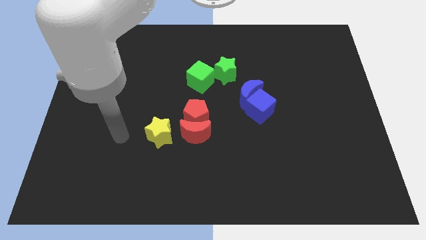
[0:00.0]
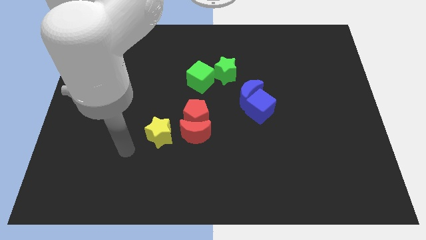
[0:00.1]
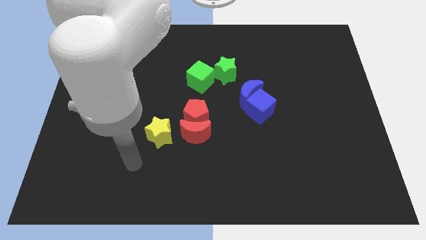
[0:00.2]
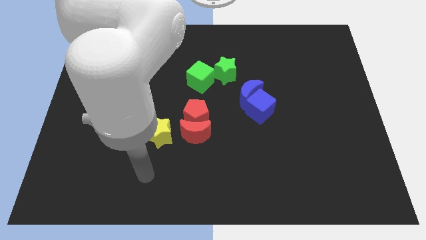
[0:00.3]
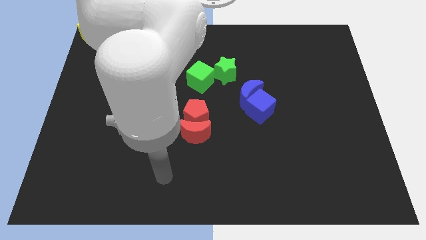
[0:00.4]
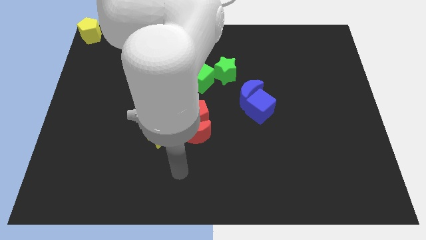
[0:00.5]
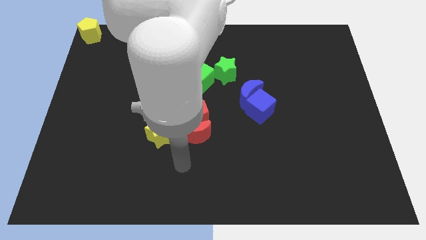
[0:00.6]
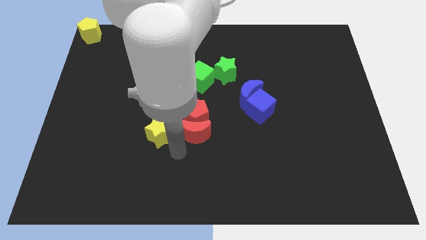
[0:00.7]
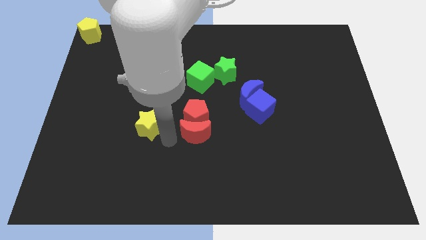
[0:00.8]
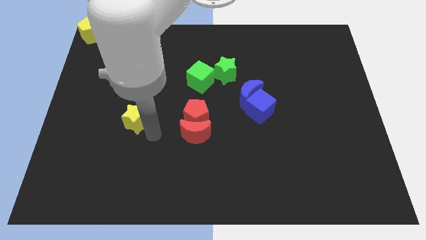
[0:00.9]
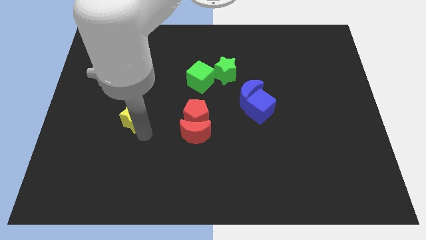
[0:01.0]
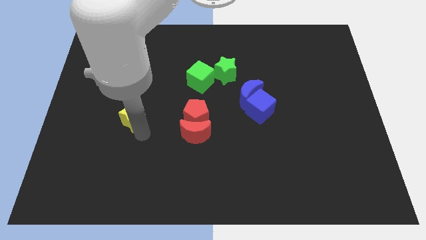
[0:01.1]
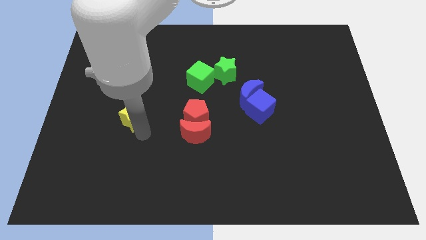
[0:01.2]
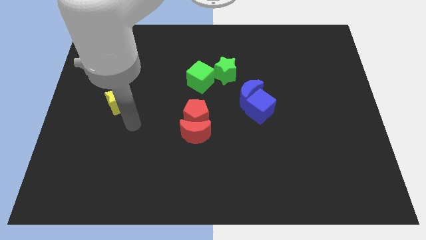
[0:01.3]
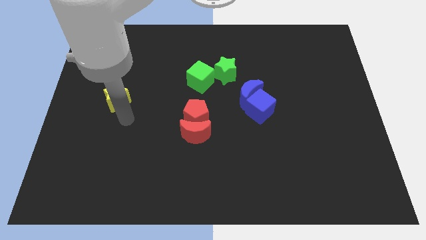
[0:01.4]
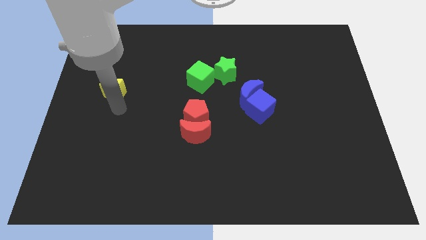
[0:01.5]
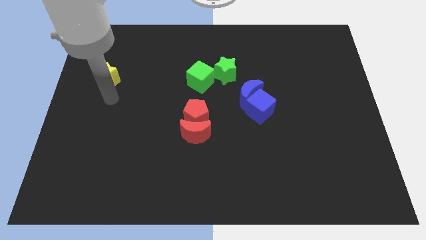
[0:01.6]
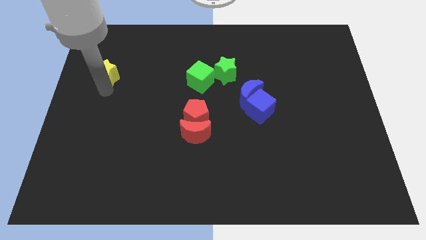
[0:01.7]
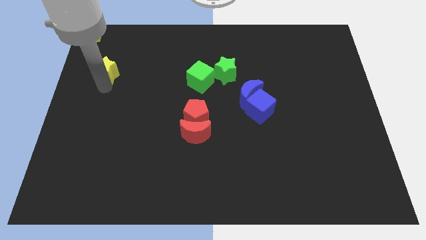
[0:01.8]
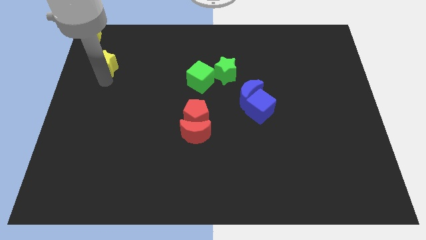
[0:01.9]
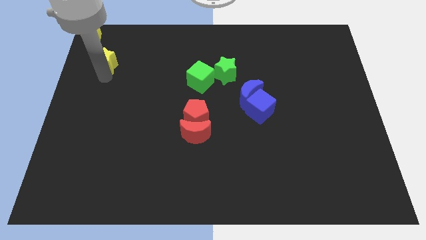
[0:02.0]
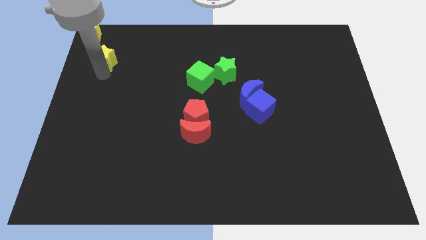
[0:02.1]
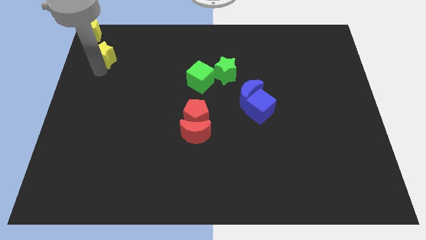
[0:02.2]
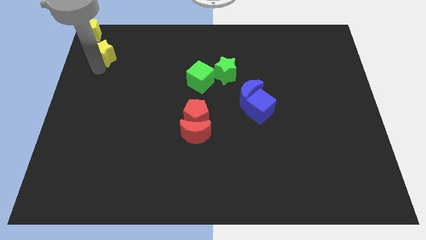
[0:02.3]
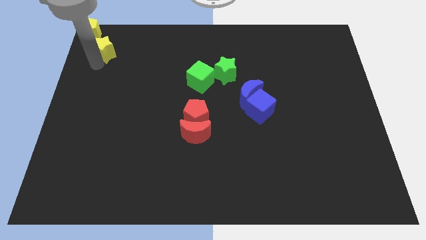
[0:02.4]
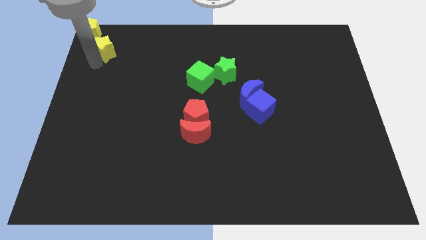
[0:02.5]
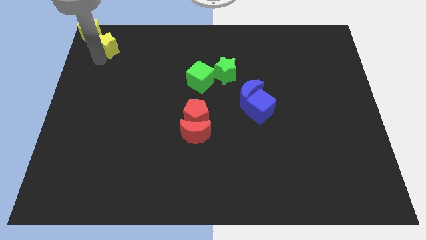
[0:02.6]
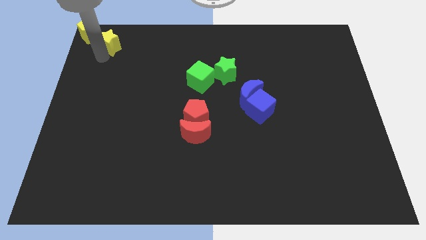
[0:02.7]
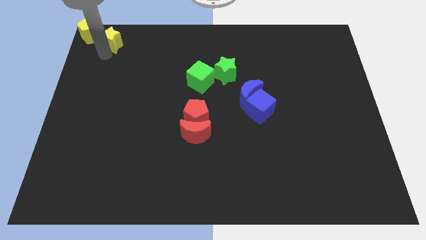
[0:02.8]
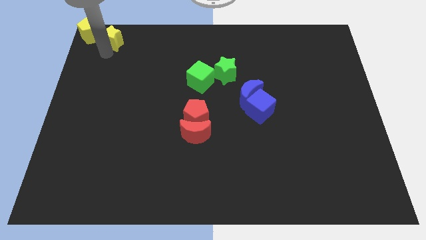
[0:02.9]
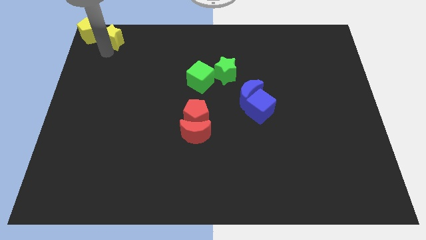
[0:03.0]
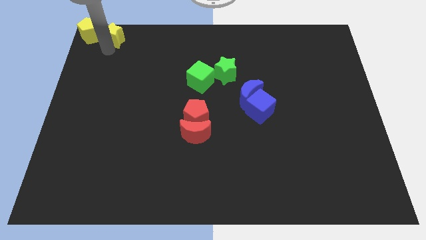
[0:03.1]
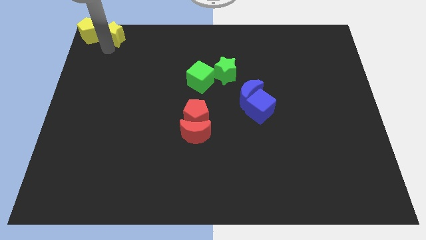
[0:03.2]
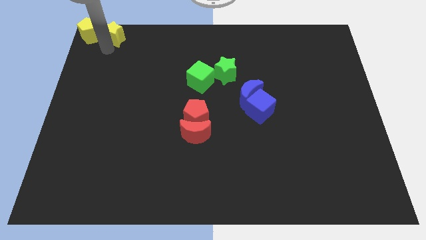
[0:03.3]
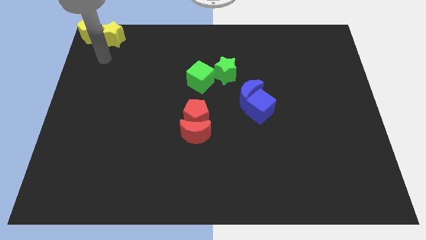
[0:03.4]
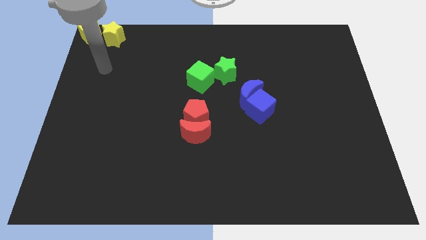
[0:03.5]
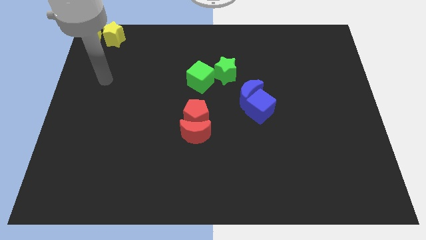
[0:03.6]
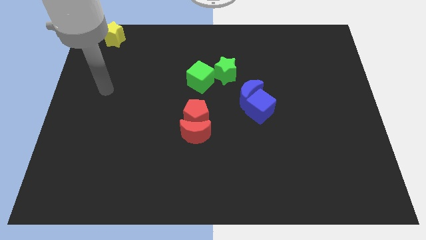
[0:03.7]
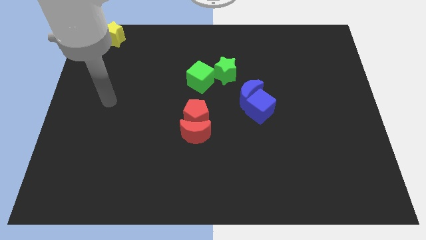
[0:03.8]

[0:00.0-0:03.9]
drag the yellow star to the right of the yellow pentagon

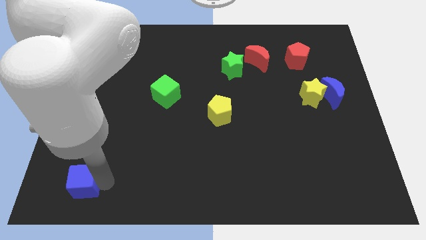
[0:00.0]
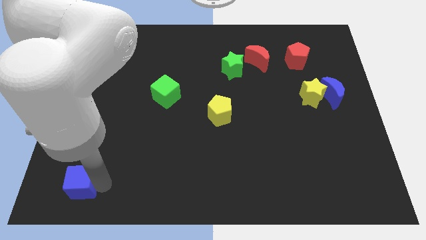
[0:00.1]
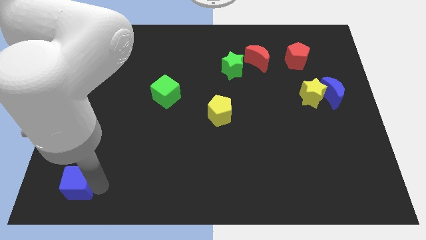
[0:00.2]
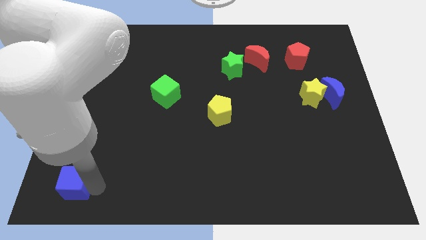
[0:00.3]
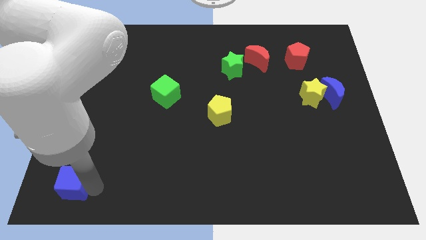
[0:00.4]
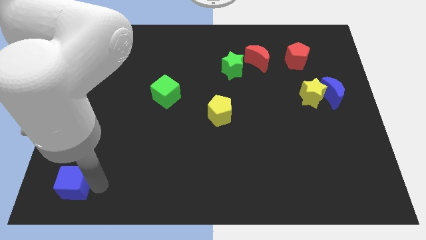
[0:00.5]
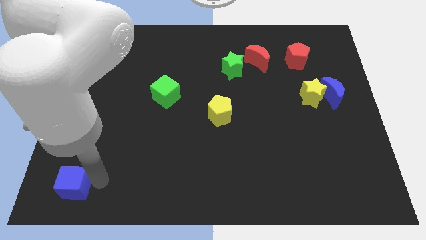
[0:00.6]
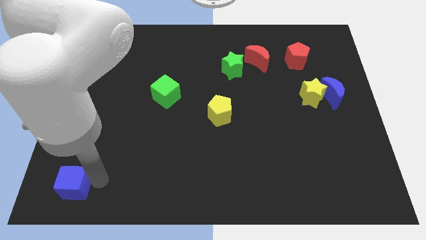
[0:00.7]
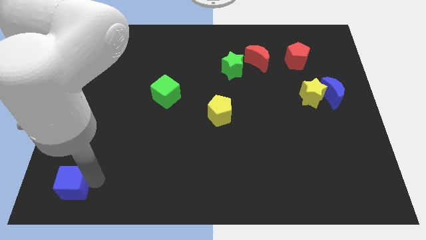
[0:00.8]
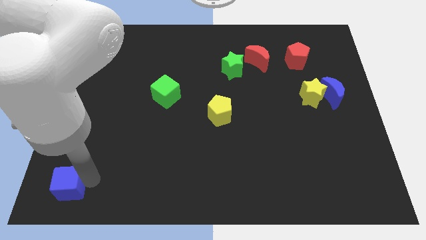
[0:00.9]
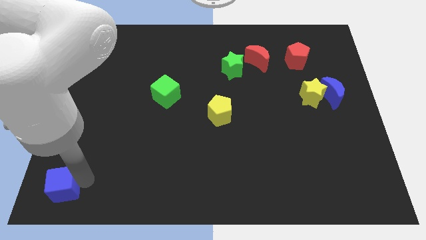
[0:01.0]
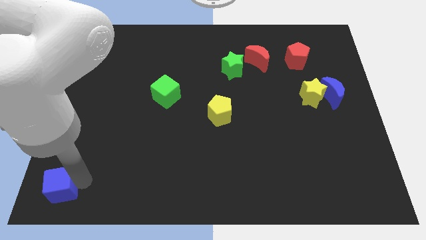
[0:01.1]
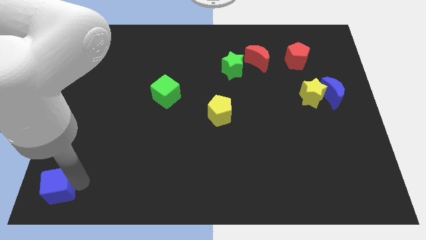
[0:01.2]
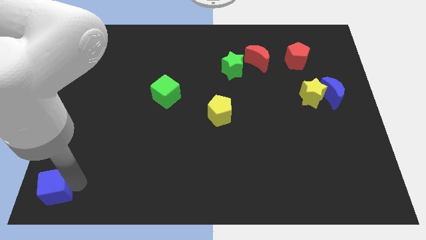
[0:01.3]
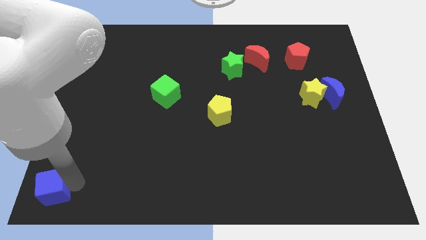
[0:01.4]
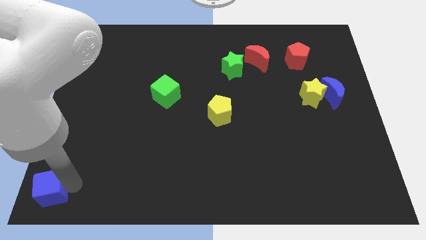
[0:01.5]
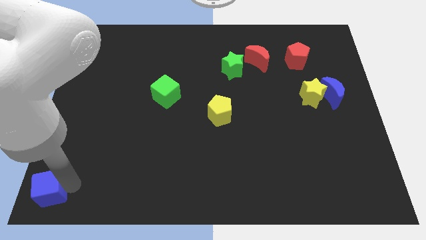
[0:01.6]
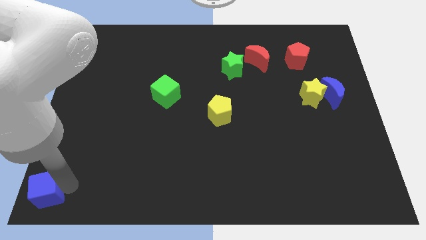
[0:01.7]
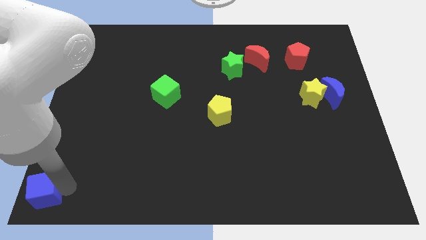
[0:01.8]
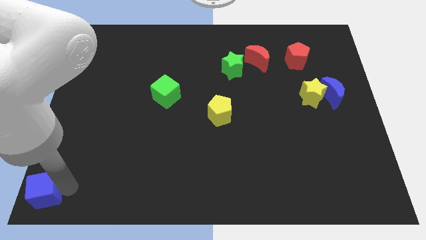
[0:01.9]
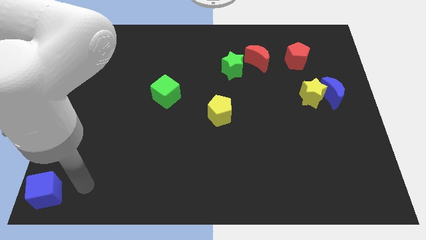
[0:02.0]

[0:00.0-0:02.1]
move blue cube left corner

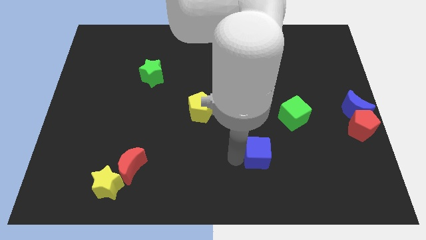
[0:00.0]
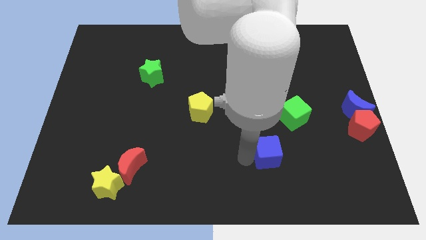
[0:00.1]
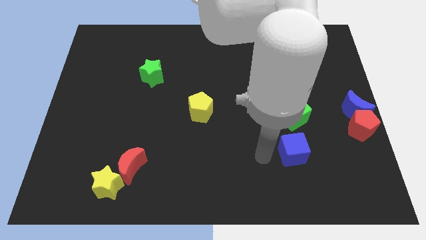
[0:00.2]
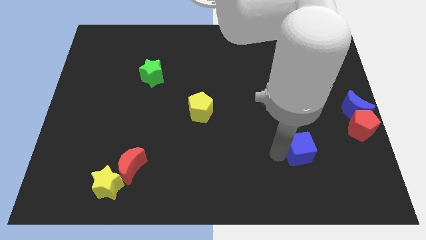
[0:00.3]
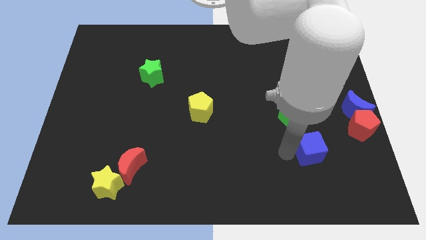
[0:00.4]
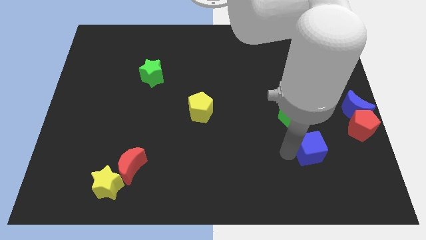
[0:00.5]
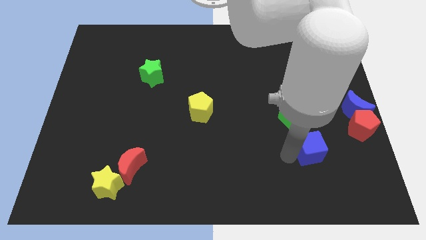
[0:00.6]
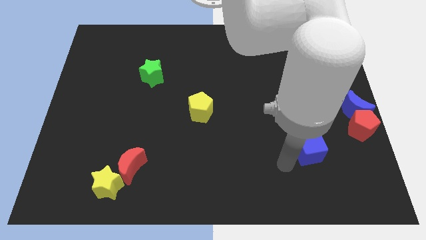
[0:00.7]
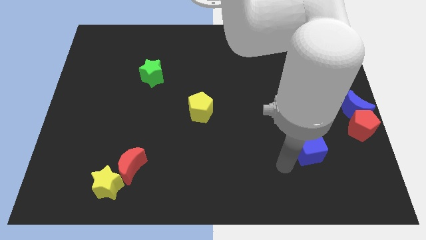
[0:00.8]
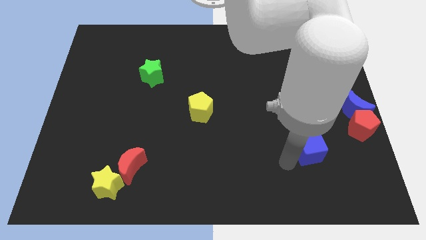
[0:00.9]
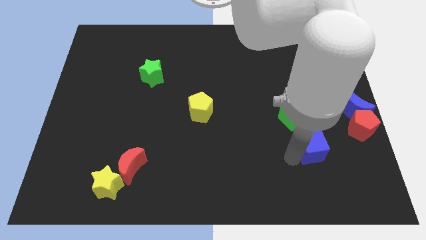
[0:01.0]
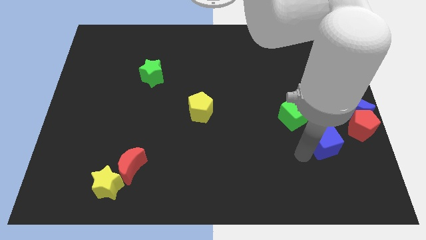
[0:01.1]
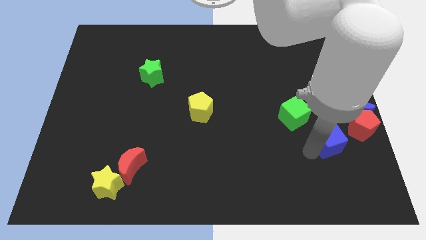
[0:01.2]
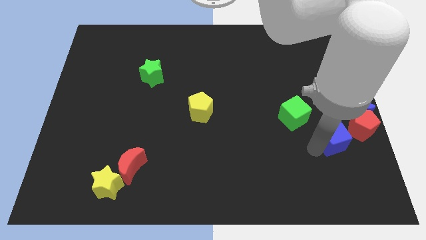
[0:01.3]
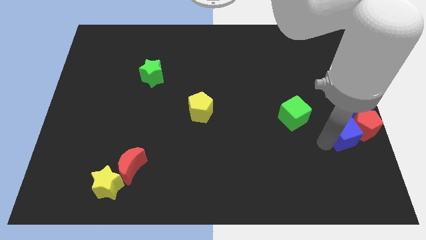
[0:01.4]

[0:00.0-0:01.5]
push the blue cube into red pentagon

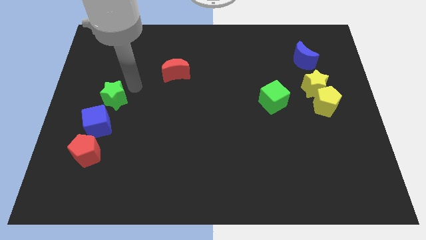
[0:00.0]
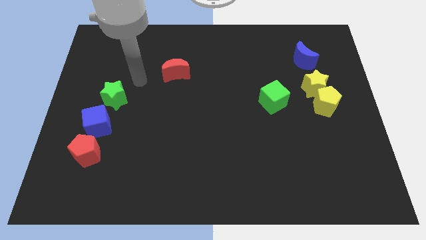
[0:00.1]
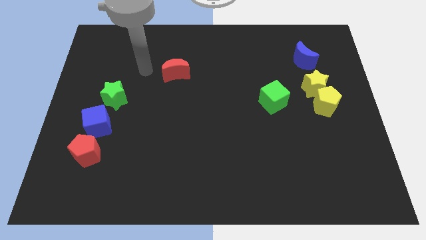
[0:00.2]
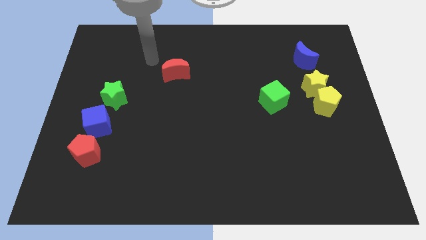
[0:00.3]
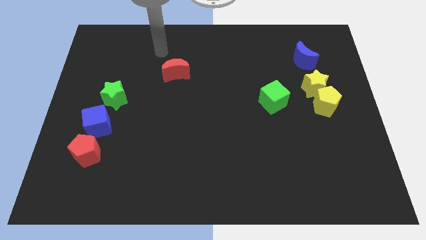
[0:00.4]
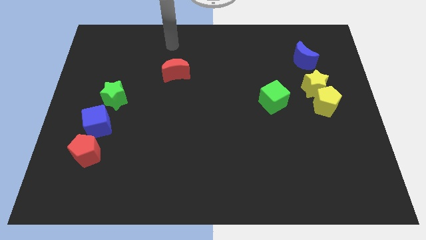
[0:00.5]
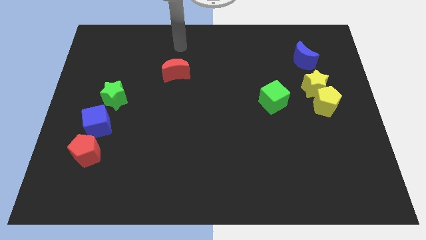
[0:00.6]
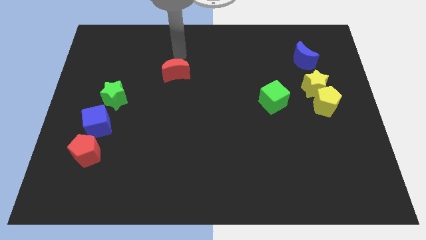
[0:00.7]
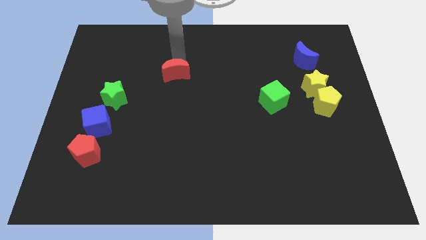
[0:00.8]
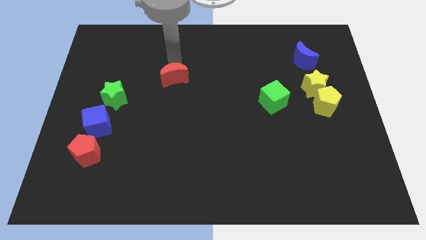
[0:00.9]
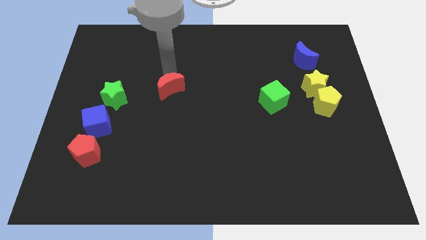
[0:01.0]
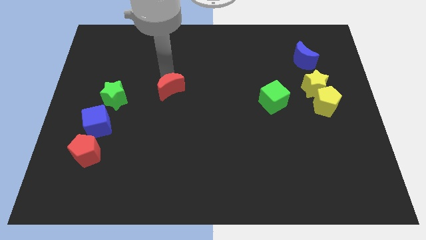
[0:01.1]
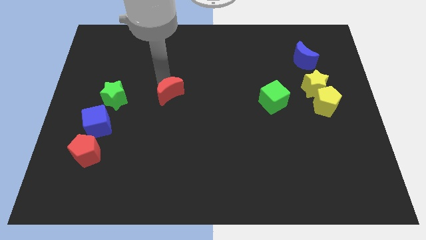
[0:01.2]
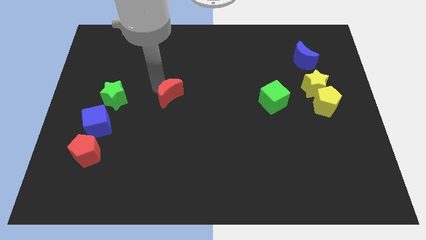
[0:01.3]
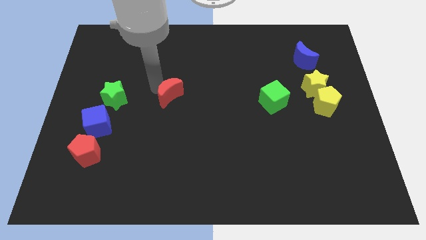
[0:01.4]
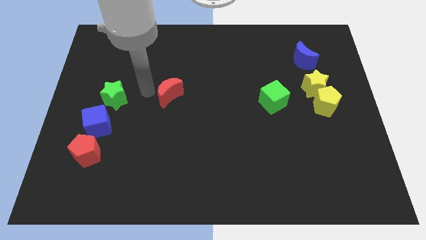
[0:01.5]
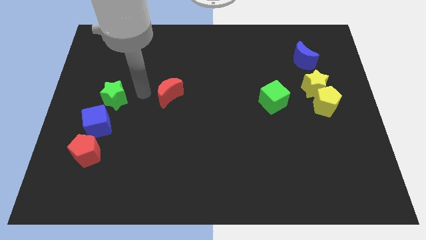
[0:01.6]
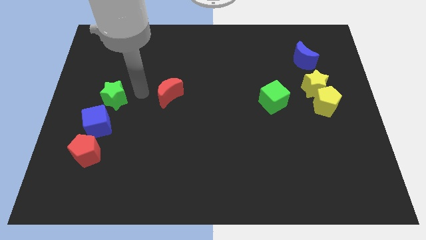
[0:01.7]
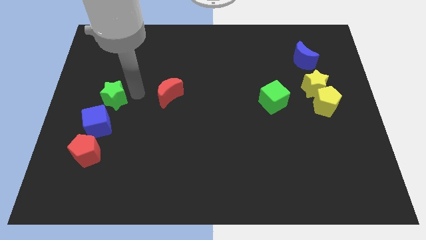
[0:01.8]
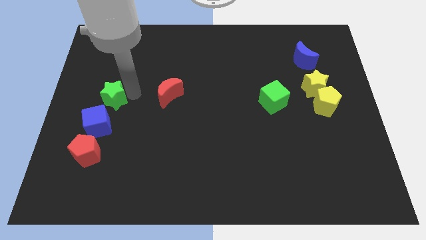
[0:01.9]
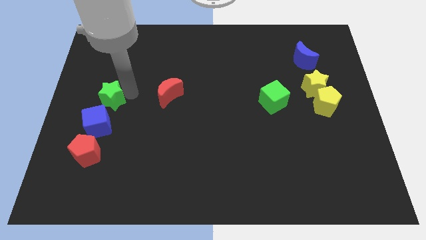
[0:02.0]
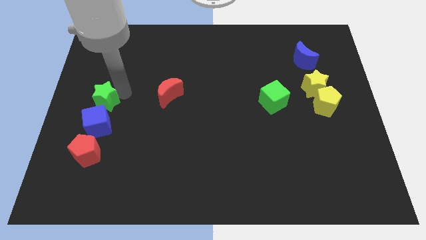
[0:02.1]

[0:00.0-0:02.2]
move green star close to blue cube
